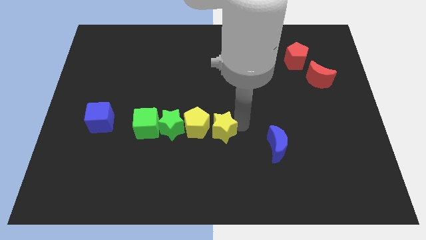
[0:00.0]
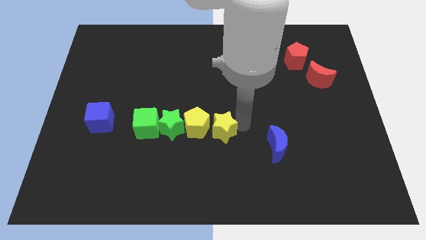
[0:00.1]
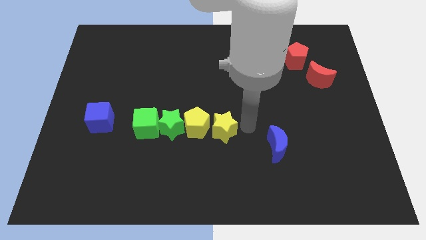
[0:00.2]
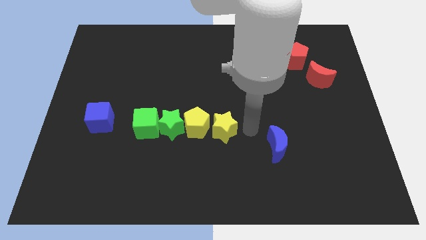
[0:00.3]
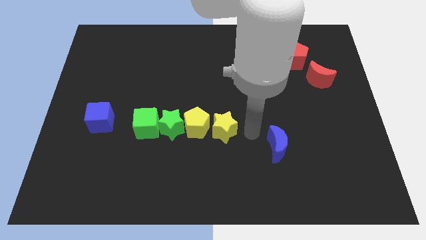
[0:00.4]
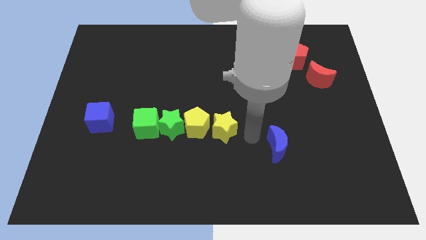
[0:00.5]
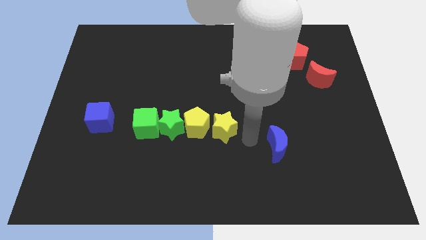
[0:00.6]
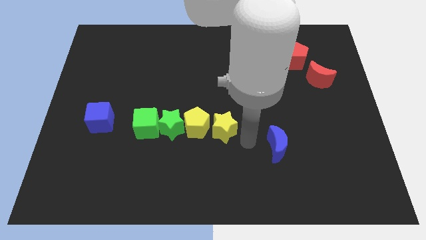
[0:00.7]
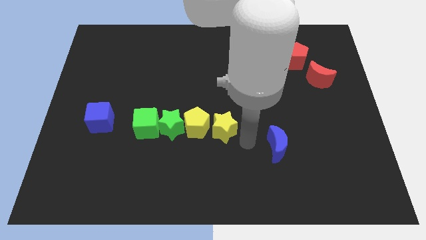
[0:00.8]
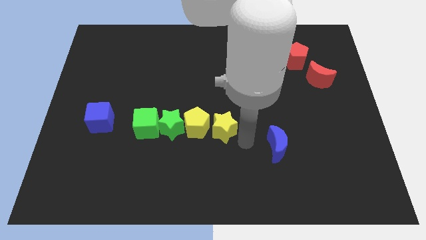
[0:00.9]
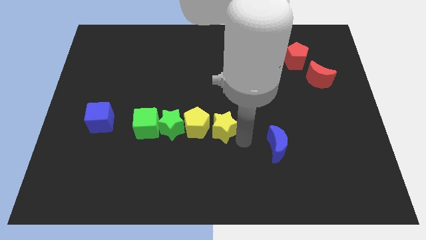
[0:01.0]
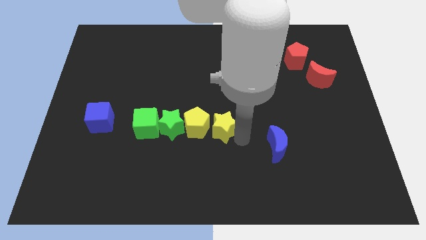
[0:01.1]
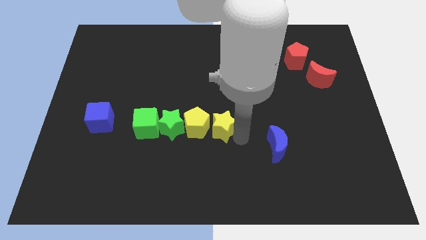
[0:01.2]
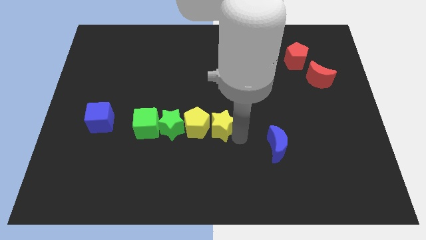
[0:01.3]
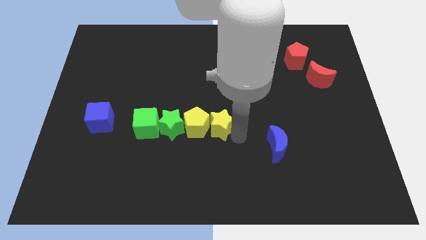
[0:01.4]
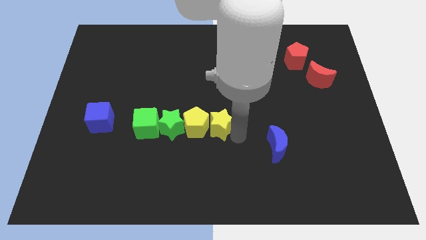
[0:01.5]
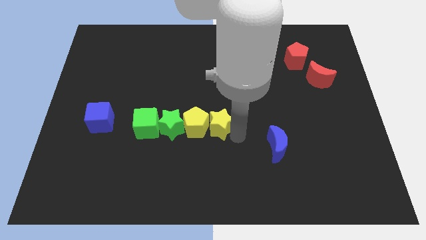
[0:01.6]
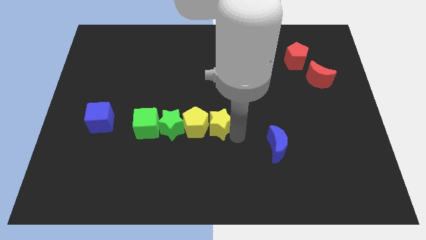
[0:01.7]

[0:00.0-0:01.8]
push the yellow star into the yellow pentagon

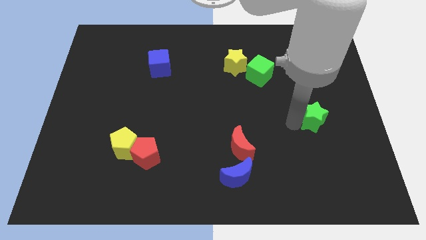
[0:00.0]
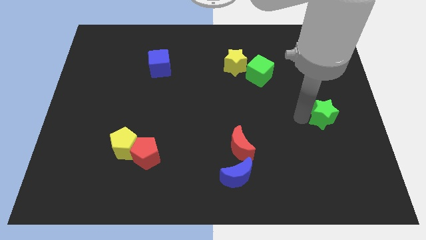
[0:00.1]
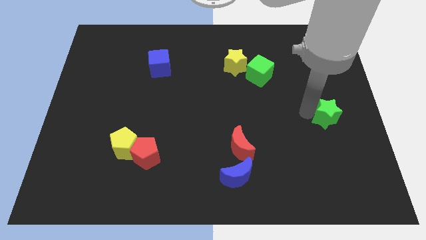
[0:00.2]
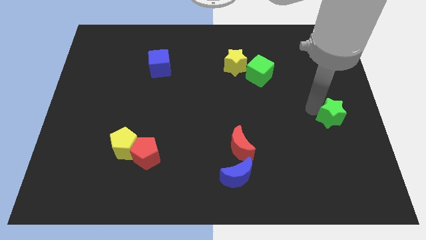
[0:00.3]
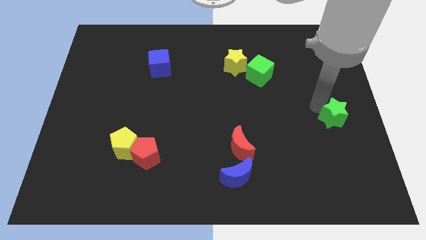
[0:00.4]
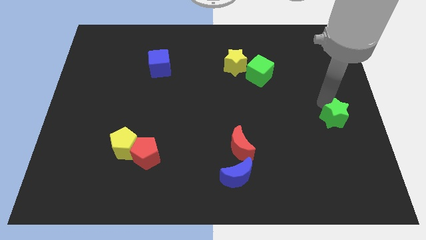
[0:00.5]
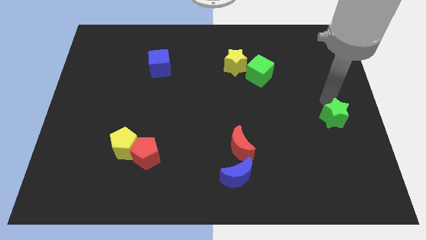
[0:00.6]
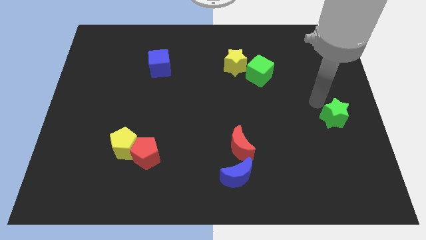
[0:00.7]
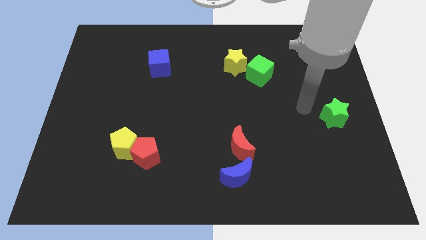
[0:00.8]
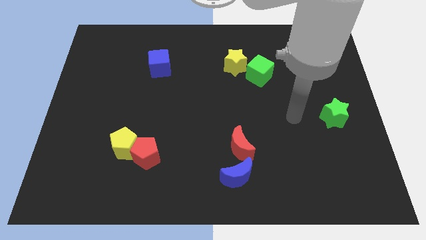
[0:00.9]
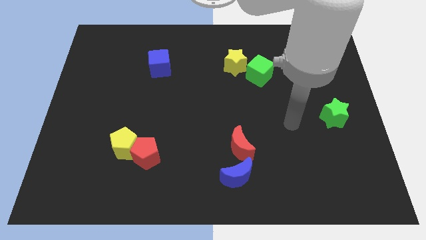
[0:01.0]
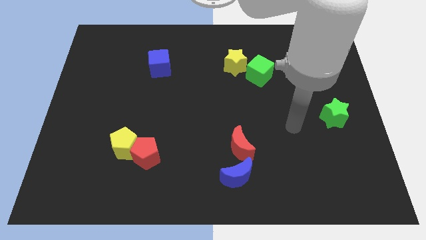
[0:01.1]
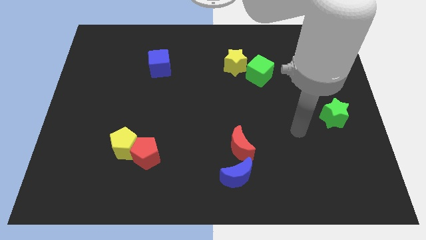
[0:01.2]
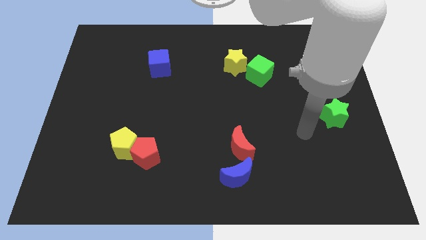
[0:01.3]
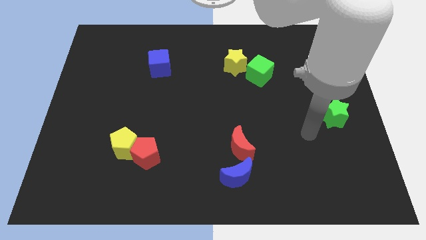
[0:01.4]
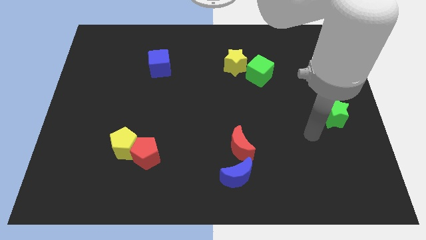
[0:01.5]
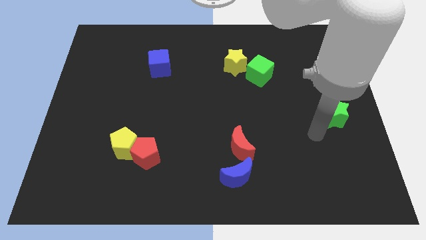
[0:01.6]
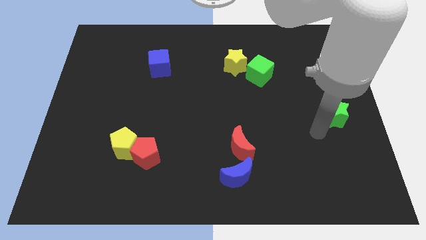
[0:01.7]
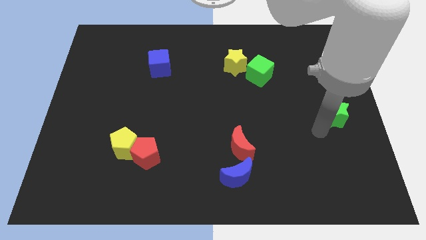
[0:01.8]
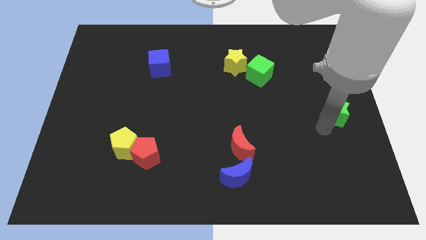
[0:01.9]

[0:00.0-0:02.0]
push the green star towards center right

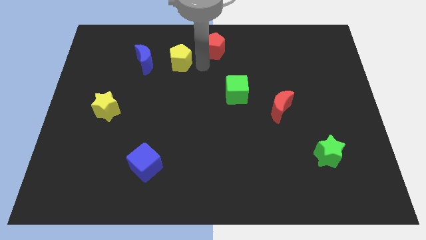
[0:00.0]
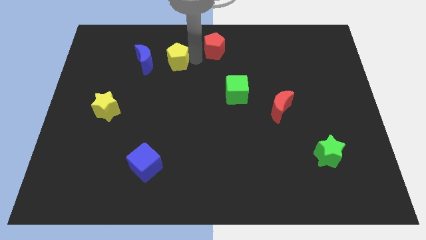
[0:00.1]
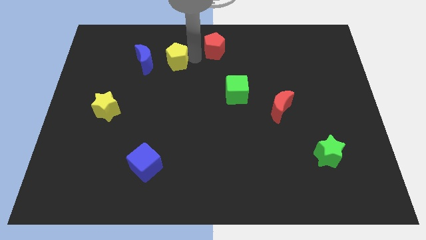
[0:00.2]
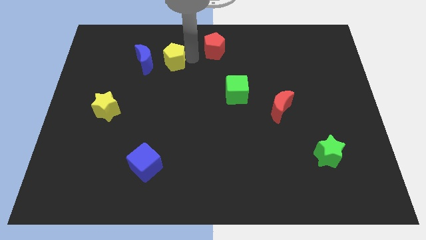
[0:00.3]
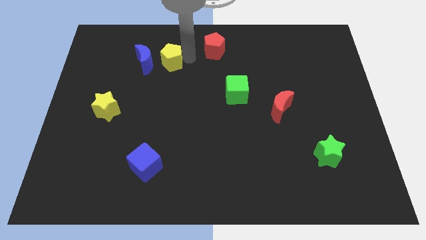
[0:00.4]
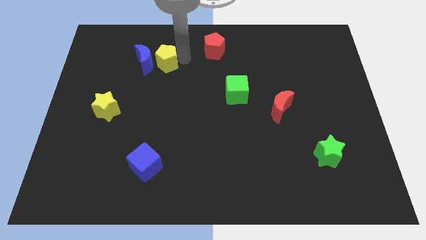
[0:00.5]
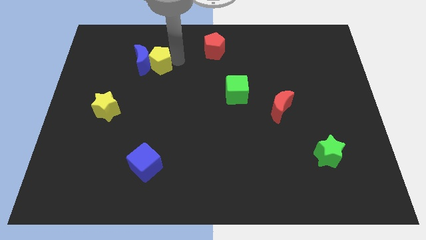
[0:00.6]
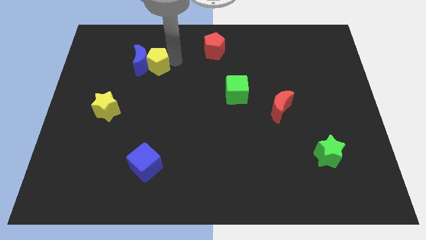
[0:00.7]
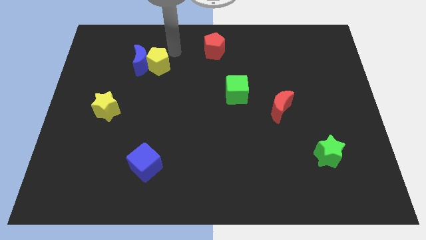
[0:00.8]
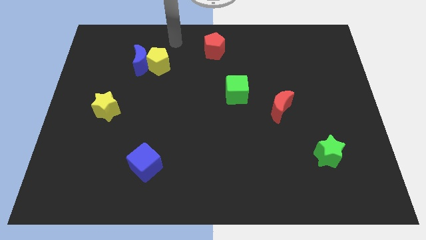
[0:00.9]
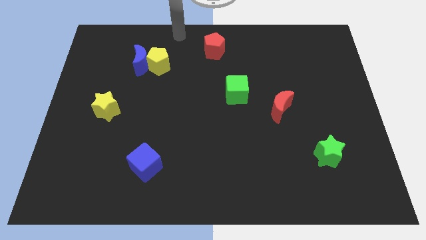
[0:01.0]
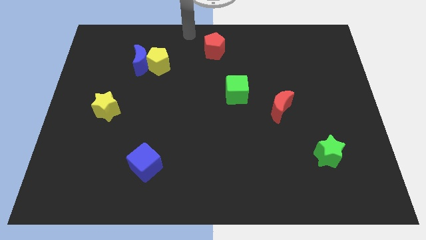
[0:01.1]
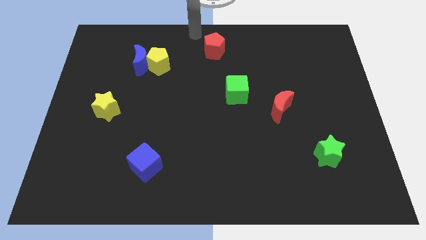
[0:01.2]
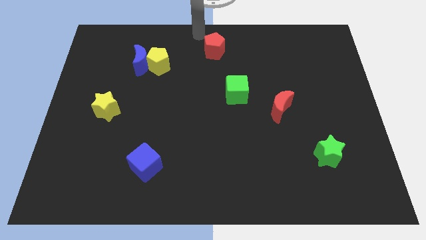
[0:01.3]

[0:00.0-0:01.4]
push the yellow pentagon into the blue crescent

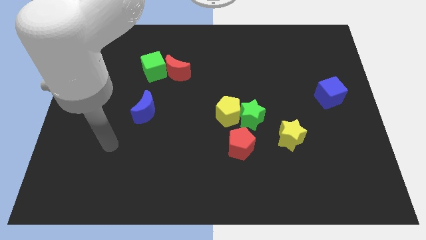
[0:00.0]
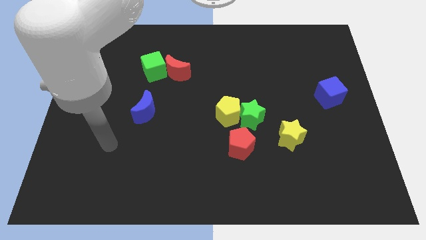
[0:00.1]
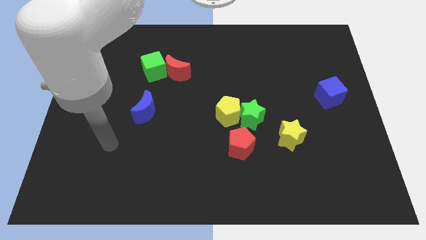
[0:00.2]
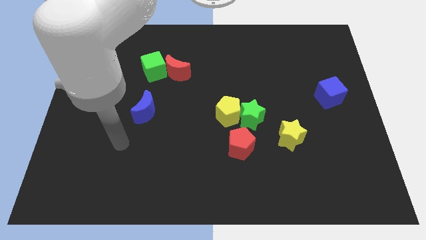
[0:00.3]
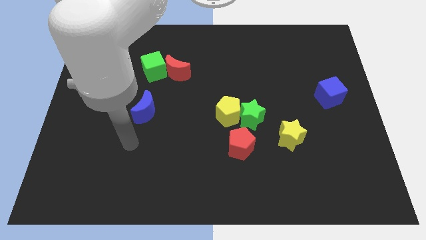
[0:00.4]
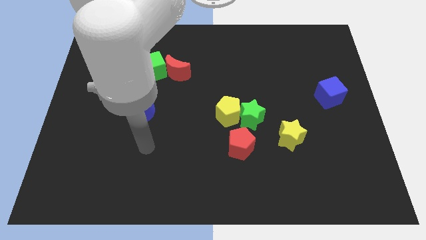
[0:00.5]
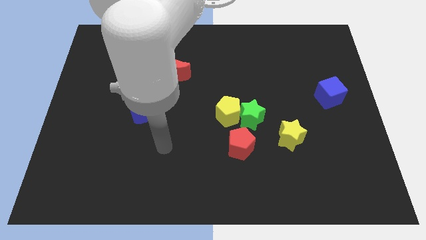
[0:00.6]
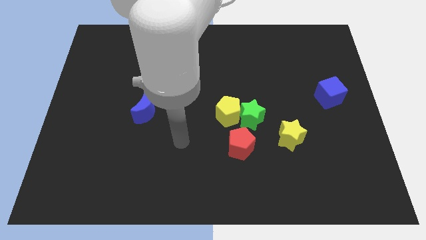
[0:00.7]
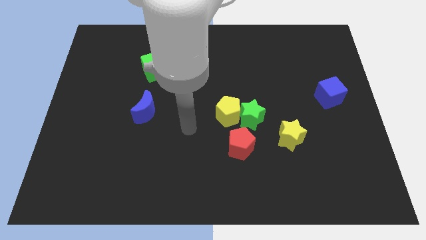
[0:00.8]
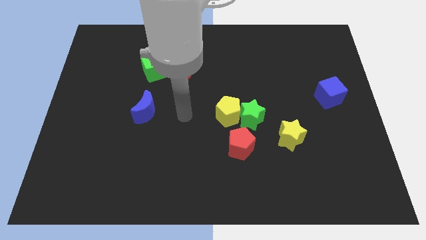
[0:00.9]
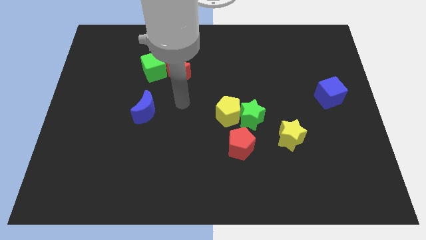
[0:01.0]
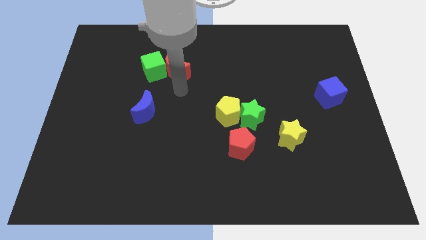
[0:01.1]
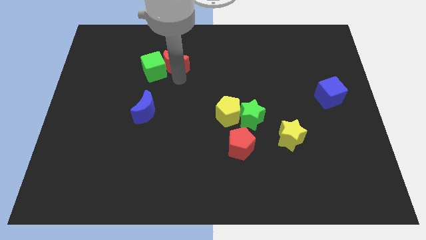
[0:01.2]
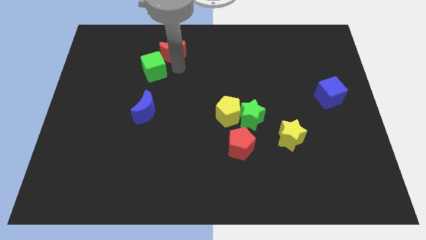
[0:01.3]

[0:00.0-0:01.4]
point your arm below red moon

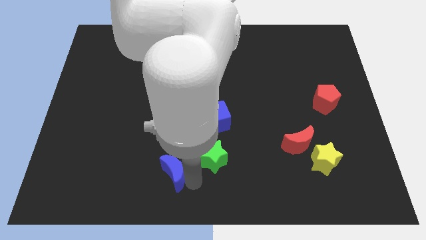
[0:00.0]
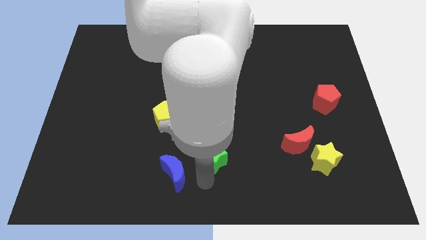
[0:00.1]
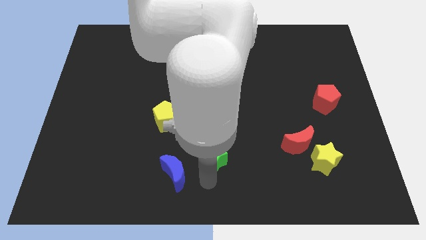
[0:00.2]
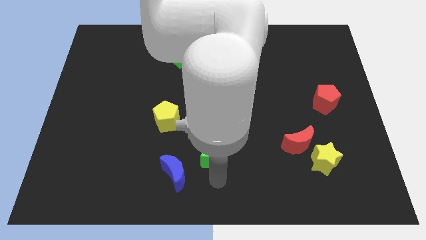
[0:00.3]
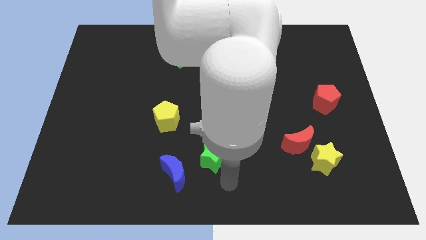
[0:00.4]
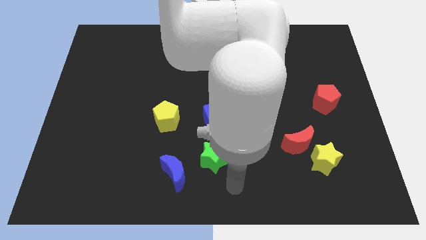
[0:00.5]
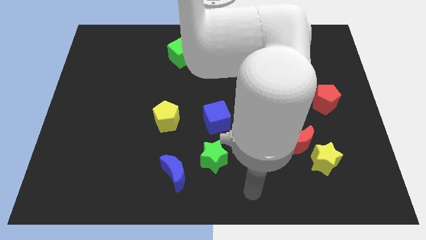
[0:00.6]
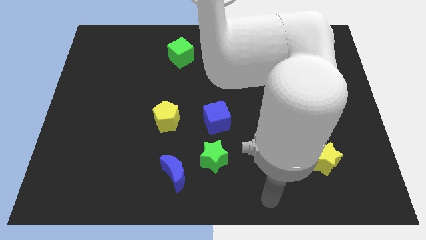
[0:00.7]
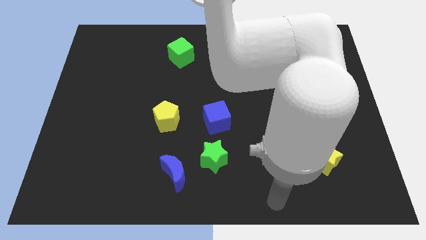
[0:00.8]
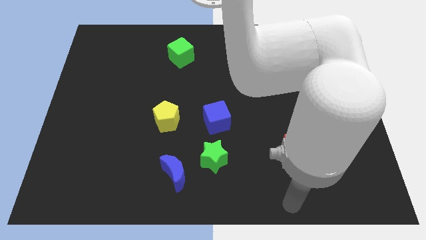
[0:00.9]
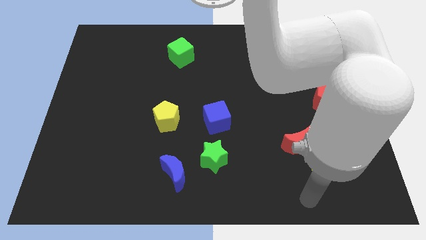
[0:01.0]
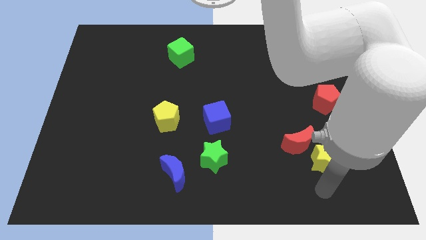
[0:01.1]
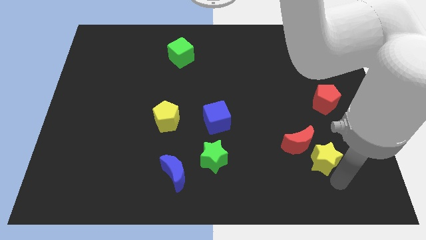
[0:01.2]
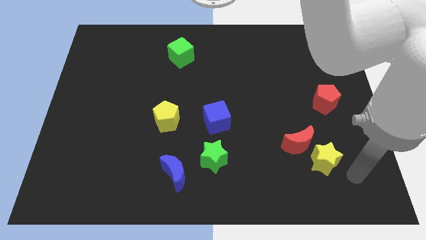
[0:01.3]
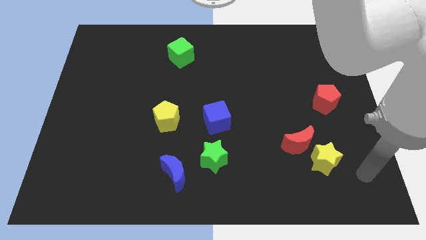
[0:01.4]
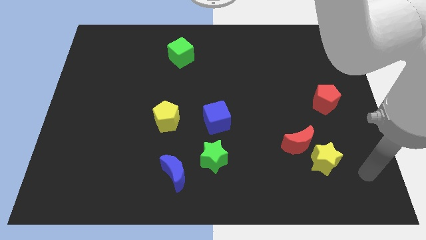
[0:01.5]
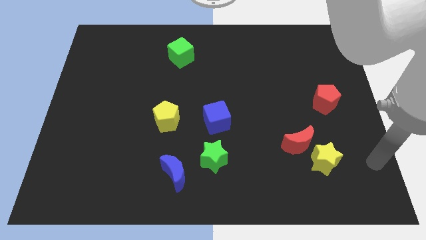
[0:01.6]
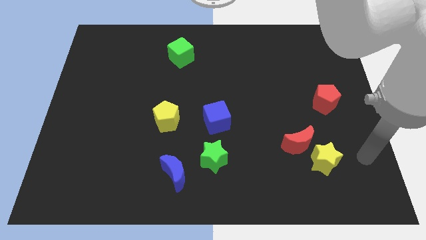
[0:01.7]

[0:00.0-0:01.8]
point your arm to the right of yellow star

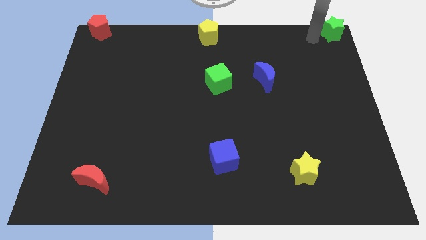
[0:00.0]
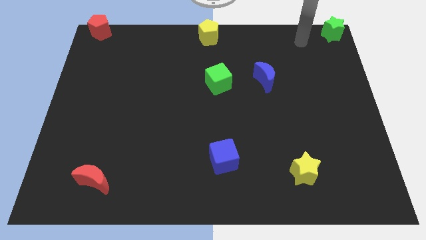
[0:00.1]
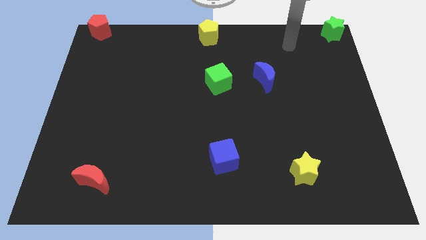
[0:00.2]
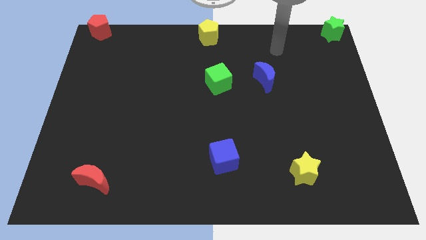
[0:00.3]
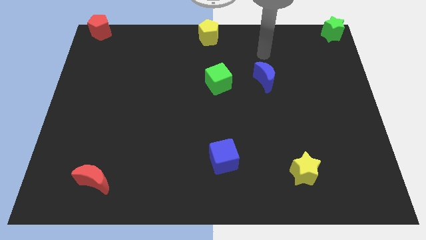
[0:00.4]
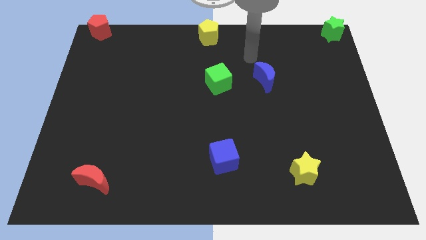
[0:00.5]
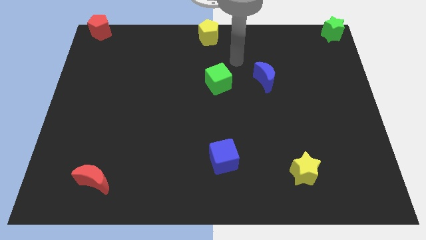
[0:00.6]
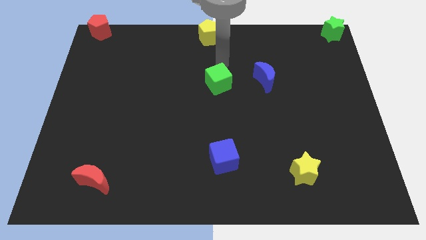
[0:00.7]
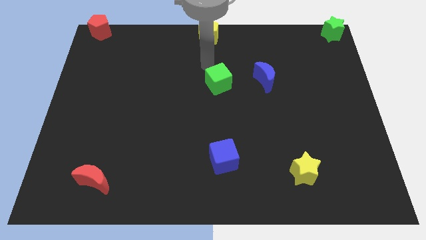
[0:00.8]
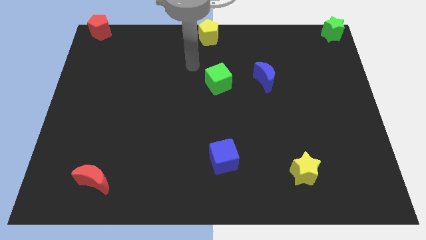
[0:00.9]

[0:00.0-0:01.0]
move your arm away from green star
